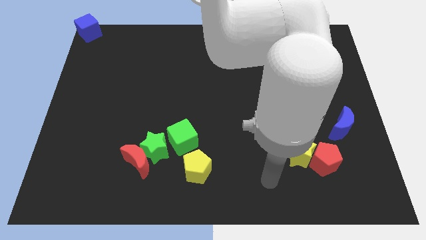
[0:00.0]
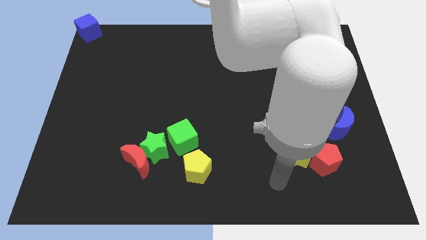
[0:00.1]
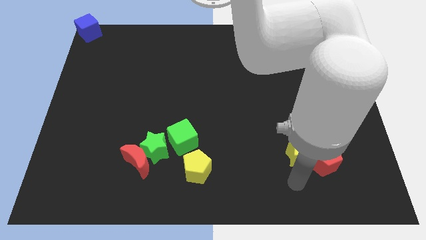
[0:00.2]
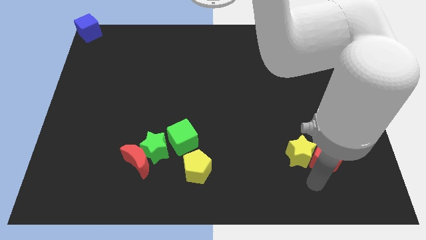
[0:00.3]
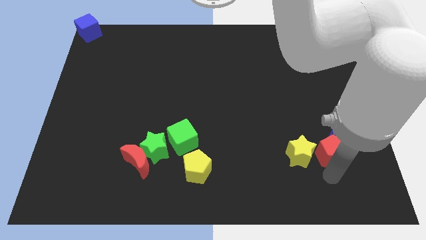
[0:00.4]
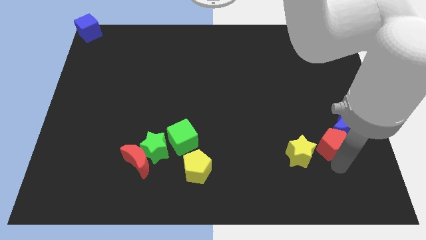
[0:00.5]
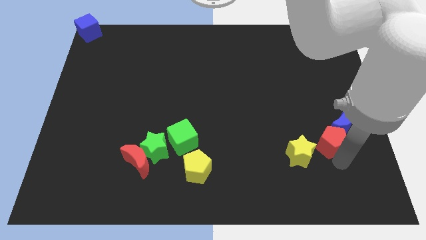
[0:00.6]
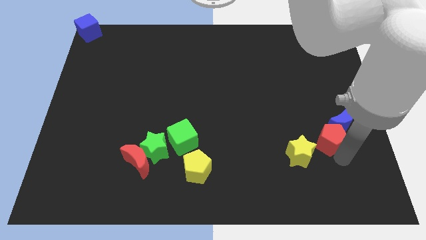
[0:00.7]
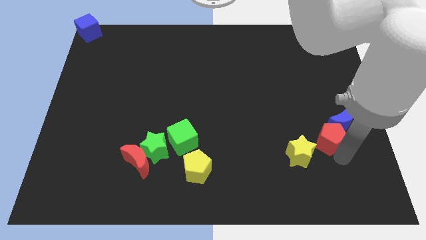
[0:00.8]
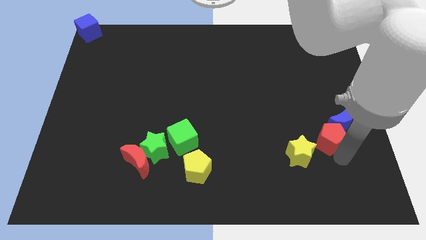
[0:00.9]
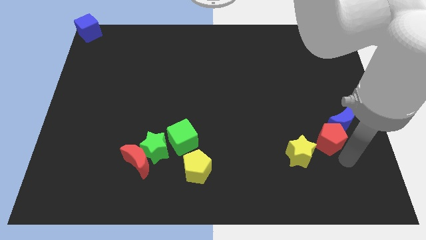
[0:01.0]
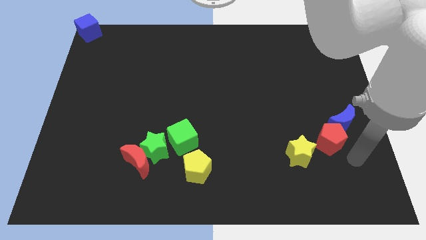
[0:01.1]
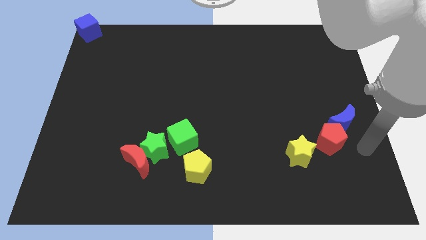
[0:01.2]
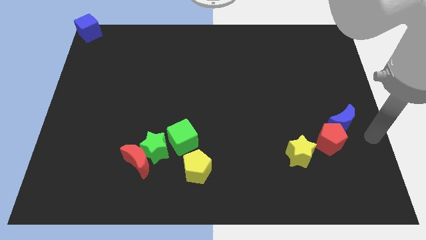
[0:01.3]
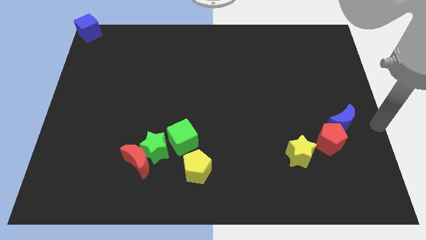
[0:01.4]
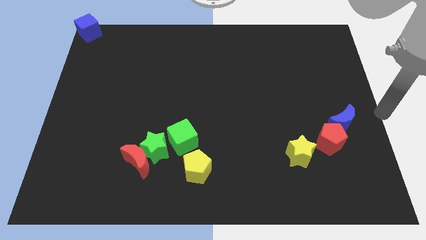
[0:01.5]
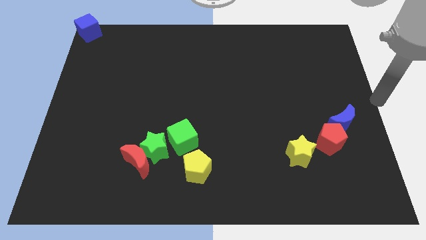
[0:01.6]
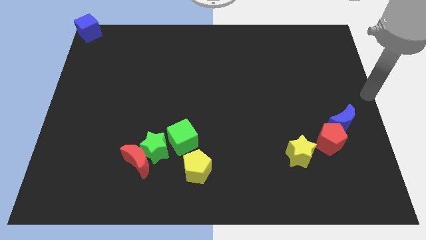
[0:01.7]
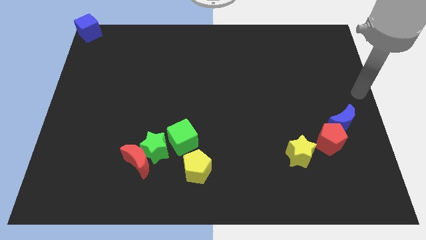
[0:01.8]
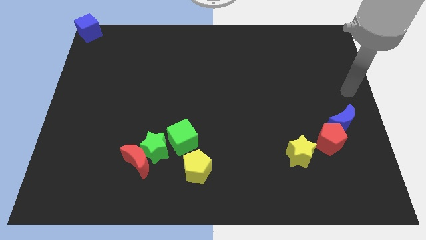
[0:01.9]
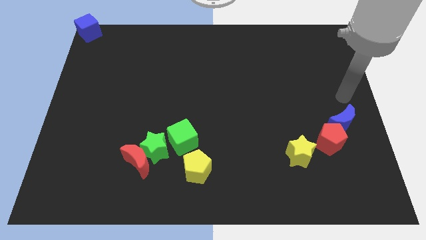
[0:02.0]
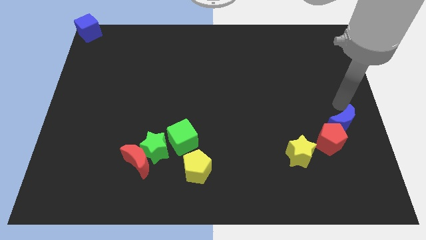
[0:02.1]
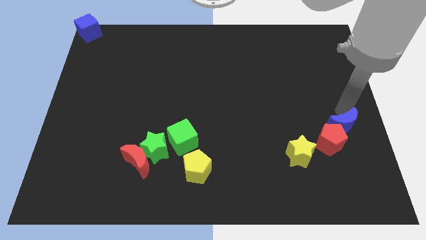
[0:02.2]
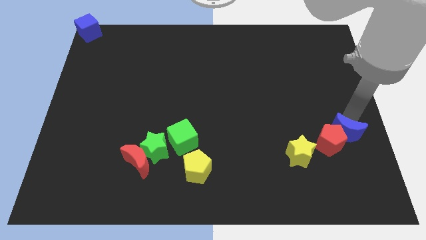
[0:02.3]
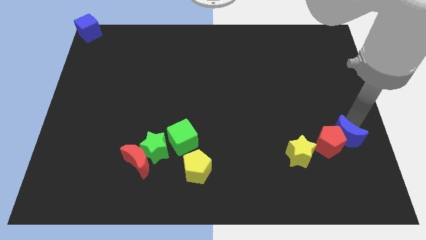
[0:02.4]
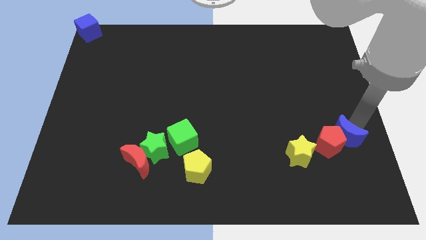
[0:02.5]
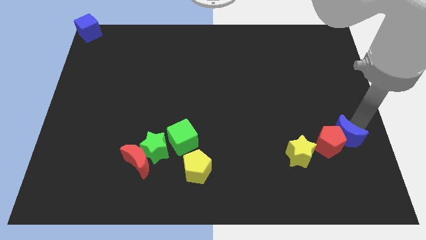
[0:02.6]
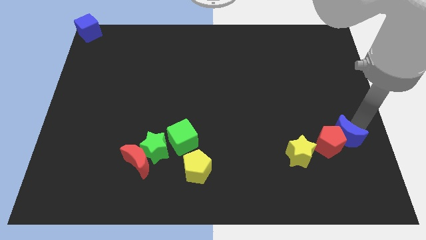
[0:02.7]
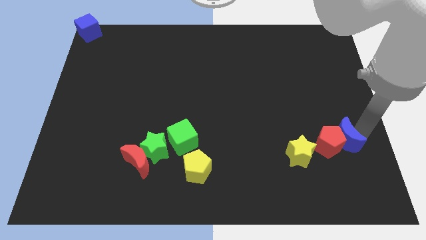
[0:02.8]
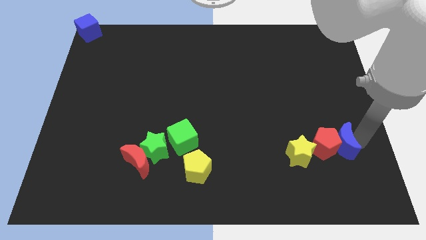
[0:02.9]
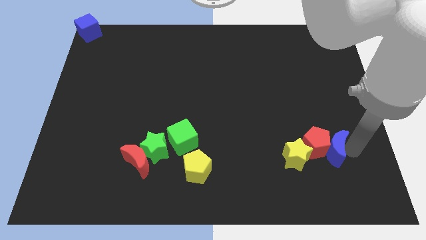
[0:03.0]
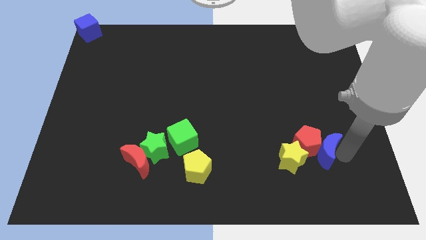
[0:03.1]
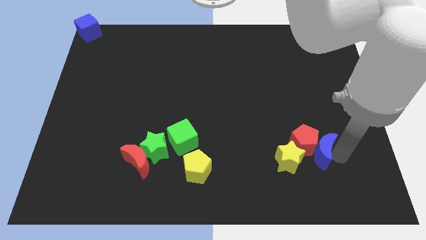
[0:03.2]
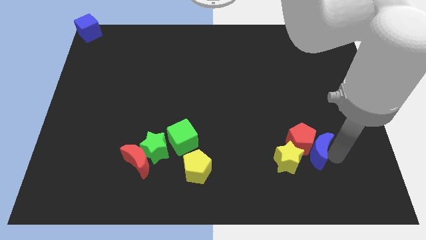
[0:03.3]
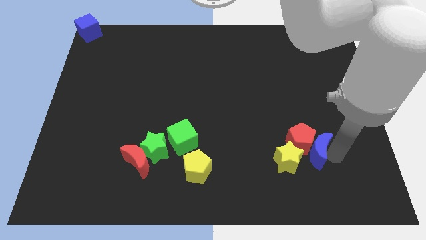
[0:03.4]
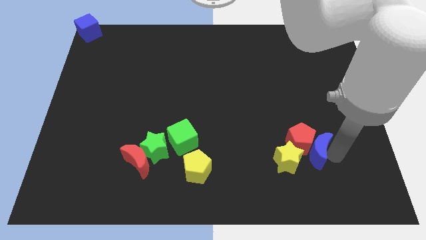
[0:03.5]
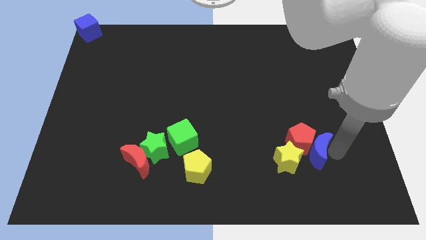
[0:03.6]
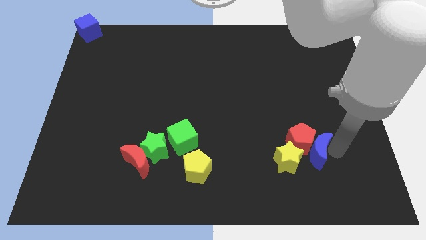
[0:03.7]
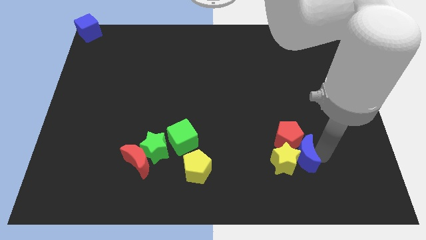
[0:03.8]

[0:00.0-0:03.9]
push the red pentagon and the blue moon into the yellow star

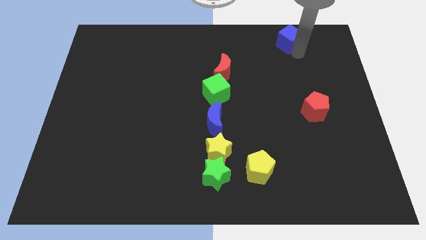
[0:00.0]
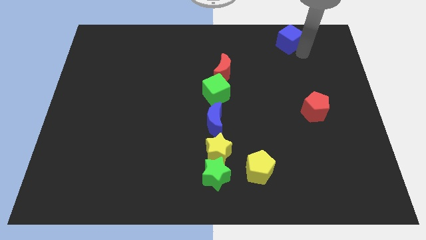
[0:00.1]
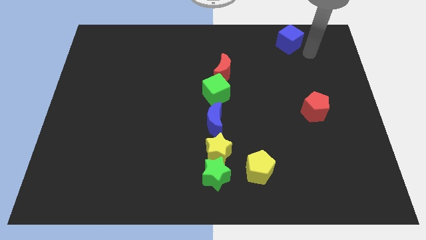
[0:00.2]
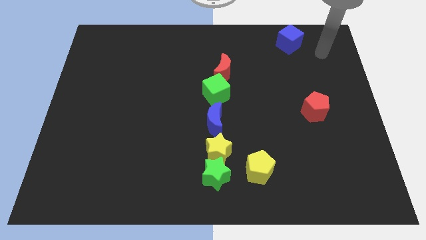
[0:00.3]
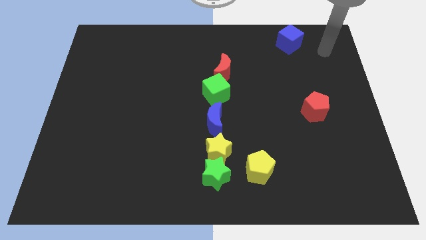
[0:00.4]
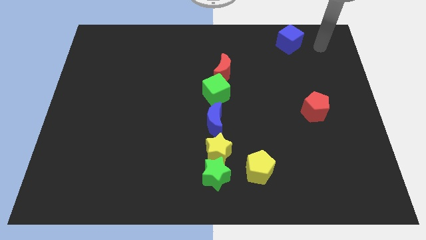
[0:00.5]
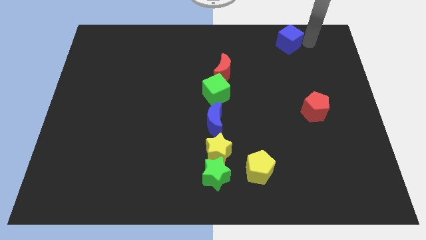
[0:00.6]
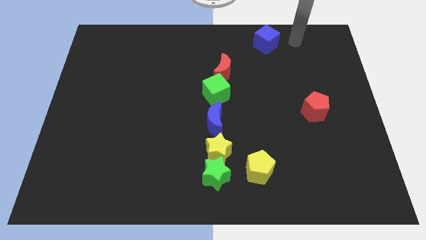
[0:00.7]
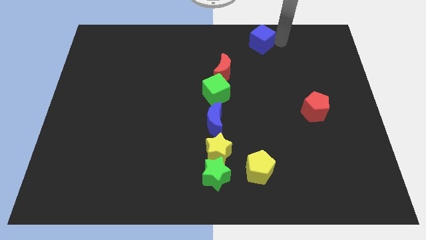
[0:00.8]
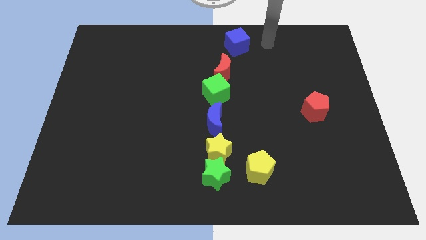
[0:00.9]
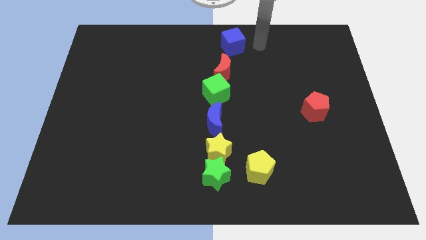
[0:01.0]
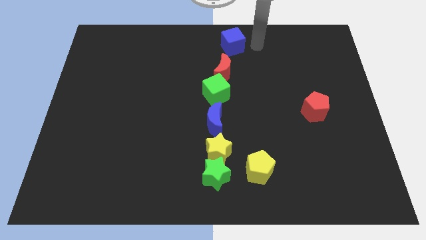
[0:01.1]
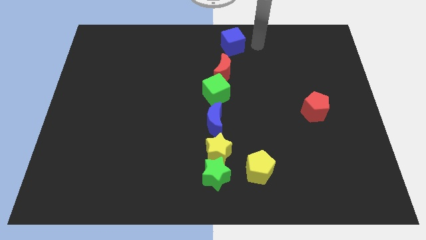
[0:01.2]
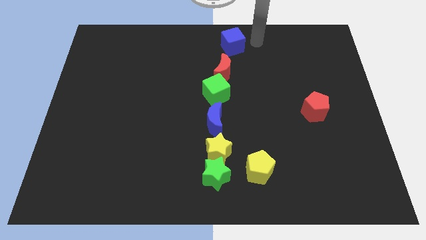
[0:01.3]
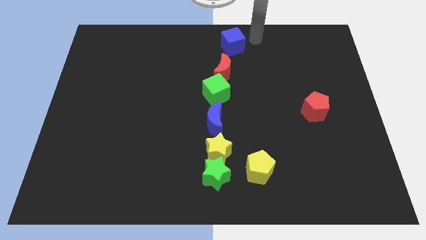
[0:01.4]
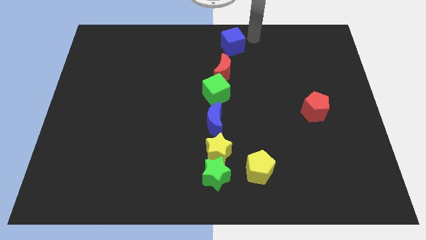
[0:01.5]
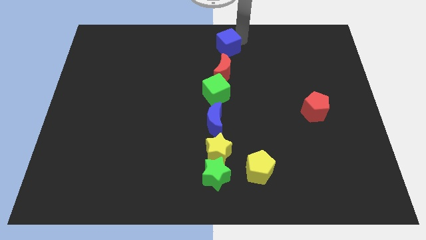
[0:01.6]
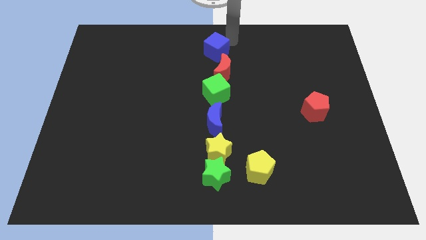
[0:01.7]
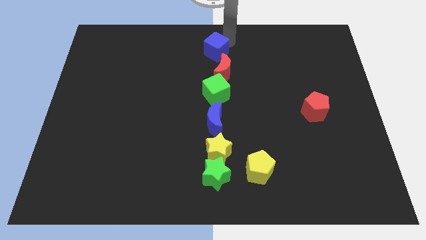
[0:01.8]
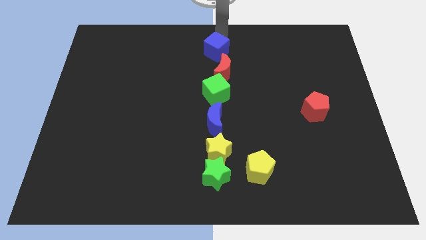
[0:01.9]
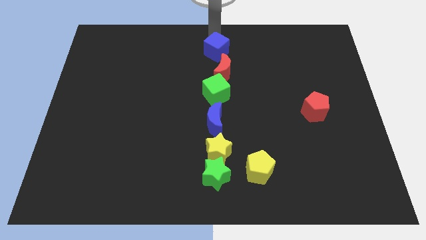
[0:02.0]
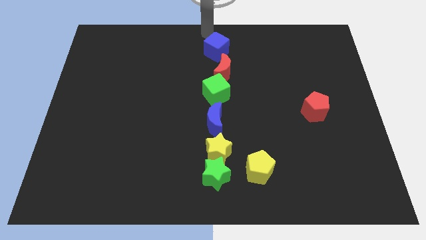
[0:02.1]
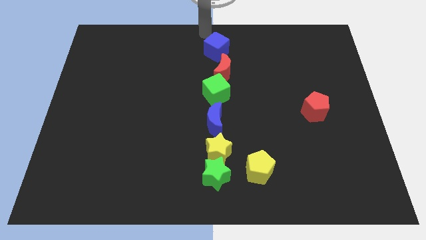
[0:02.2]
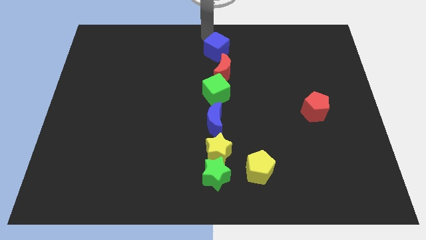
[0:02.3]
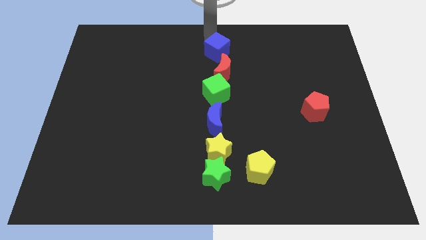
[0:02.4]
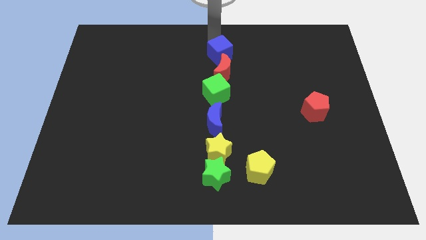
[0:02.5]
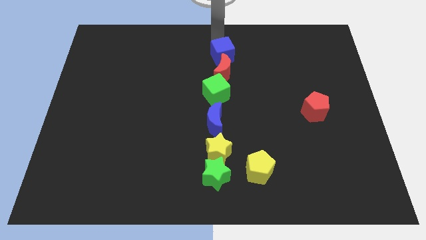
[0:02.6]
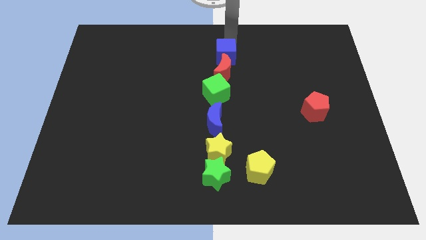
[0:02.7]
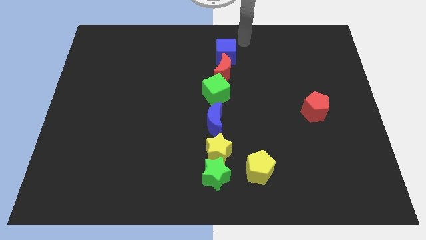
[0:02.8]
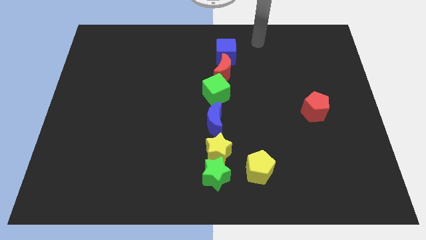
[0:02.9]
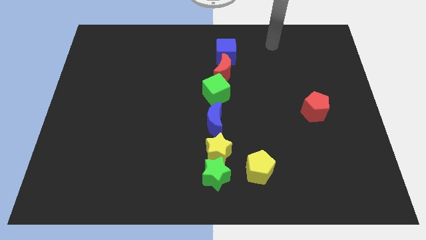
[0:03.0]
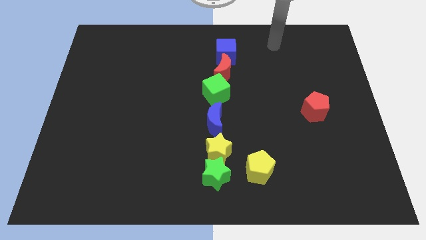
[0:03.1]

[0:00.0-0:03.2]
slide the blue cube towards the top center

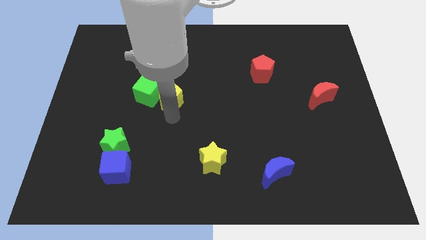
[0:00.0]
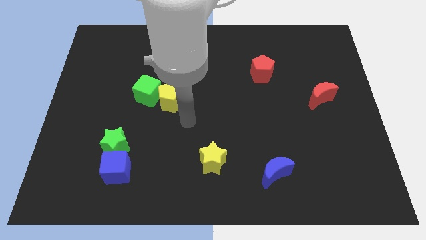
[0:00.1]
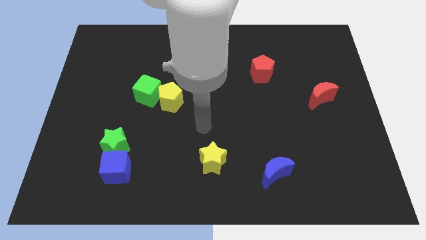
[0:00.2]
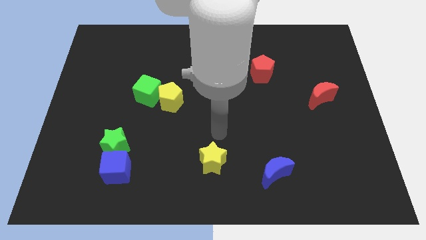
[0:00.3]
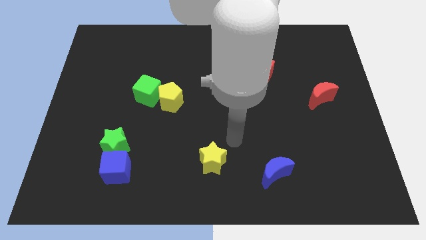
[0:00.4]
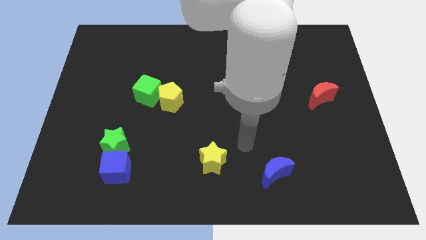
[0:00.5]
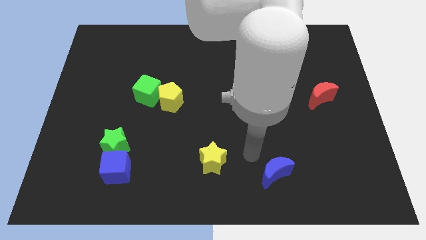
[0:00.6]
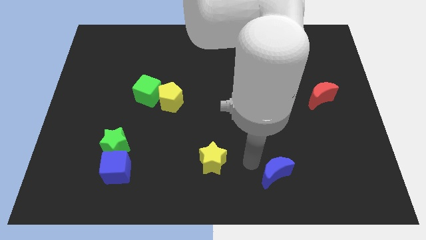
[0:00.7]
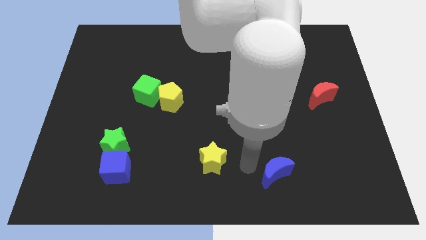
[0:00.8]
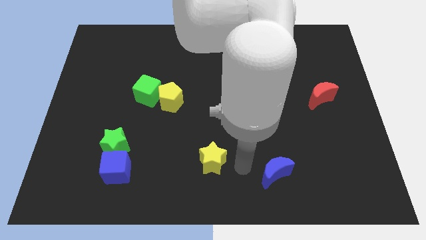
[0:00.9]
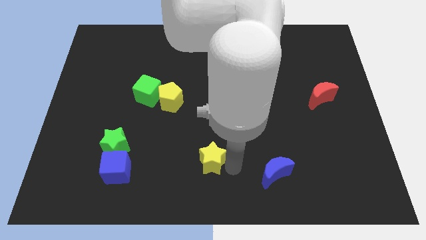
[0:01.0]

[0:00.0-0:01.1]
place your hand to the right of yellow star

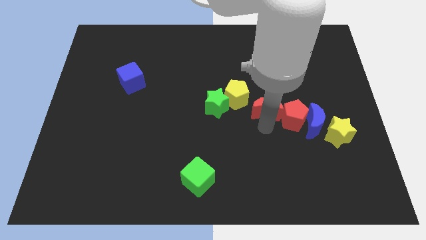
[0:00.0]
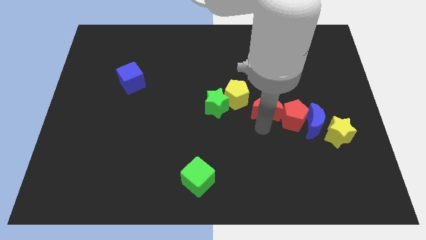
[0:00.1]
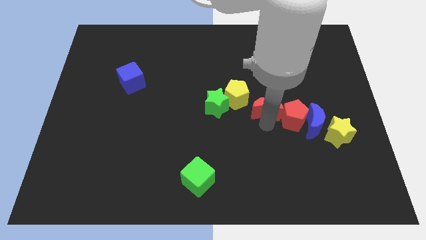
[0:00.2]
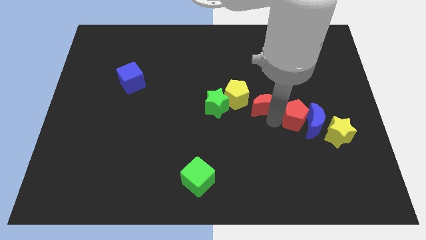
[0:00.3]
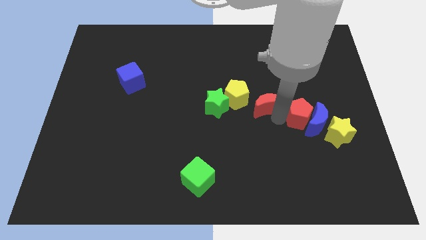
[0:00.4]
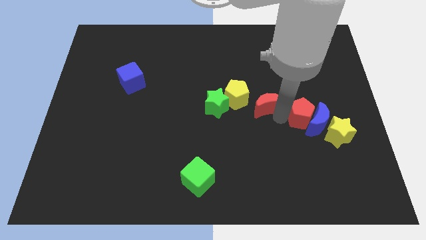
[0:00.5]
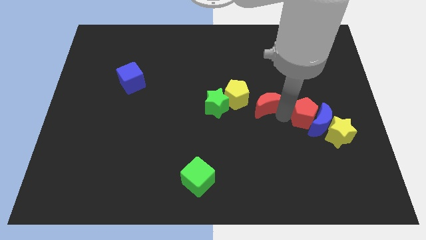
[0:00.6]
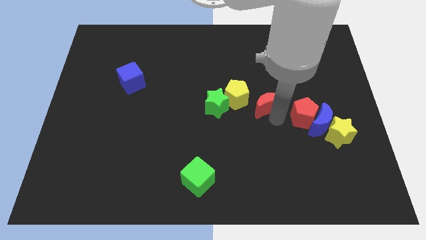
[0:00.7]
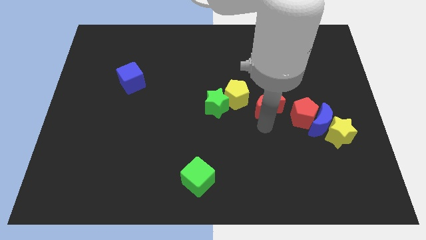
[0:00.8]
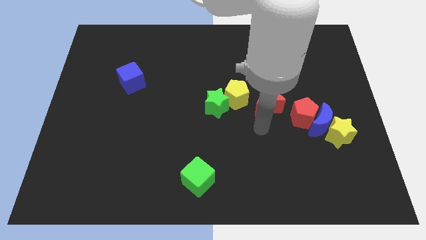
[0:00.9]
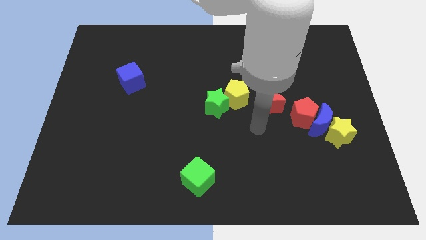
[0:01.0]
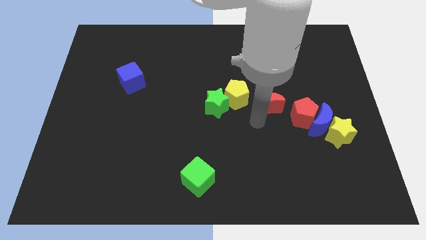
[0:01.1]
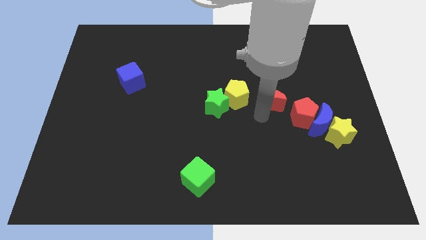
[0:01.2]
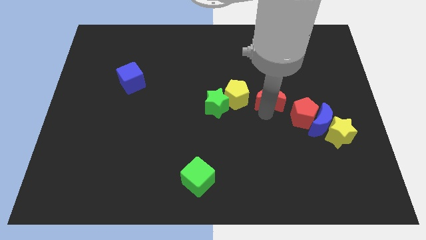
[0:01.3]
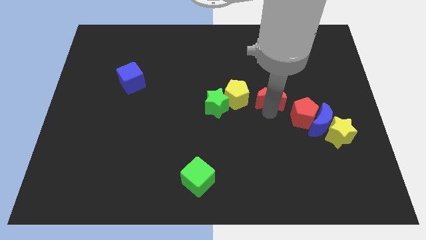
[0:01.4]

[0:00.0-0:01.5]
move the red crescent slightly to the top
